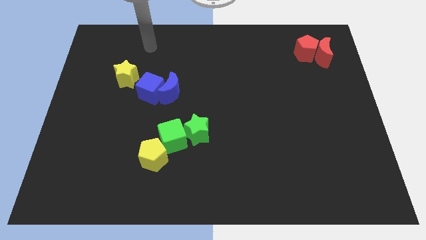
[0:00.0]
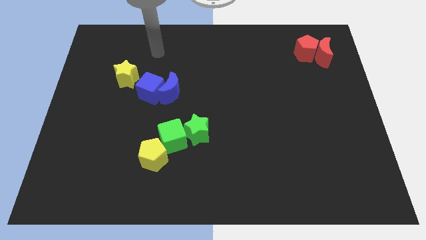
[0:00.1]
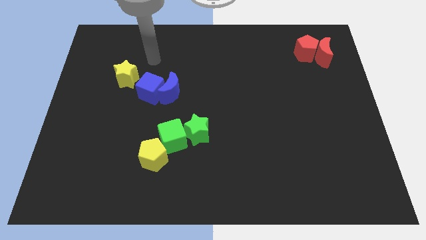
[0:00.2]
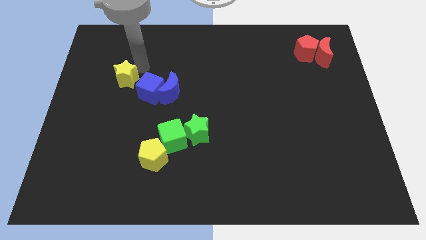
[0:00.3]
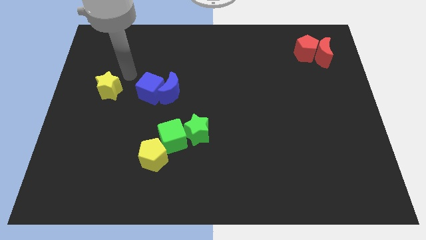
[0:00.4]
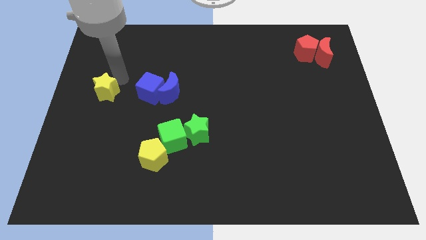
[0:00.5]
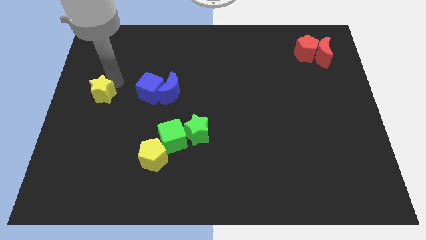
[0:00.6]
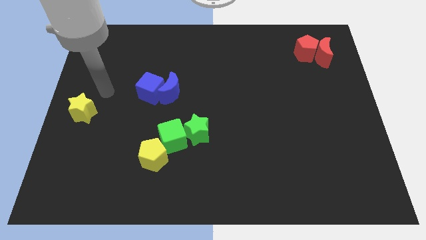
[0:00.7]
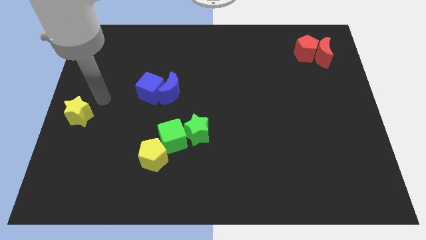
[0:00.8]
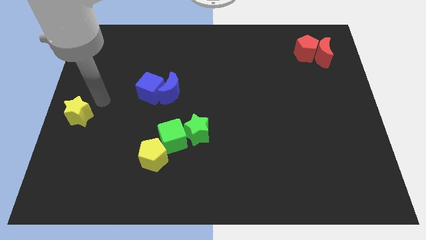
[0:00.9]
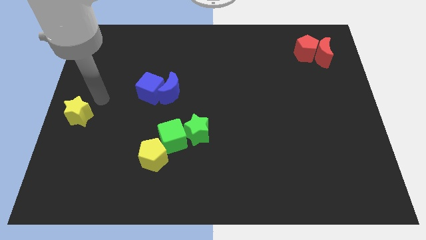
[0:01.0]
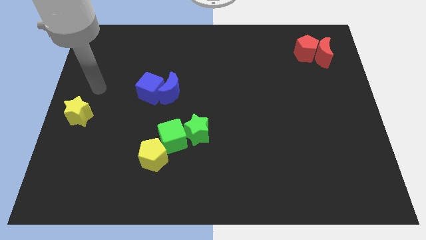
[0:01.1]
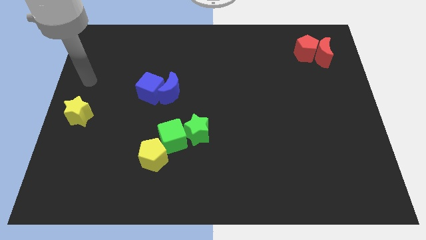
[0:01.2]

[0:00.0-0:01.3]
push the yellow star to the left center of the board

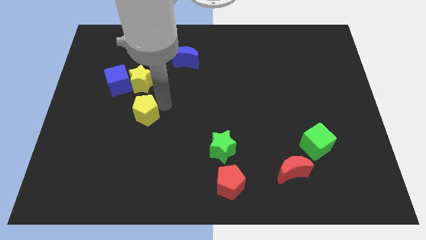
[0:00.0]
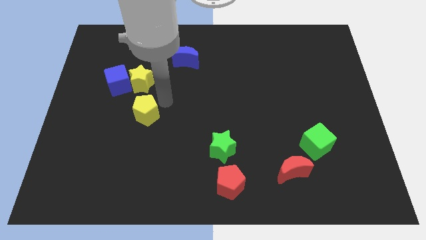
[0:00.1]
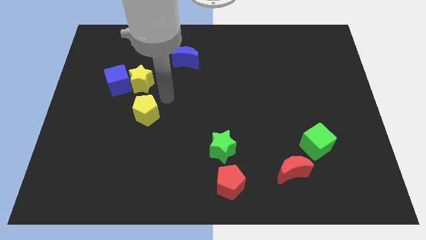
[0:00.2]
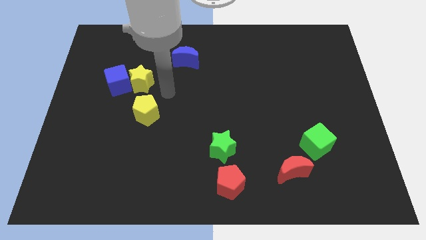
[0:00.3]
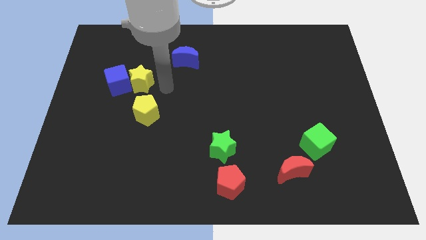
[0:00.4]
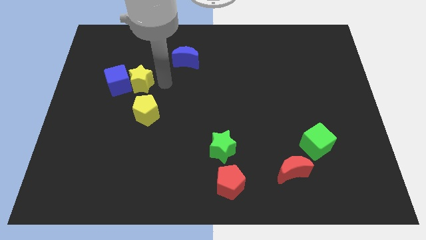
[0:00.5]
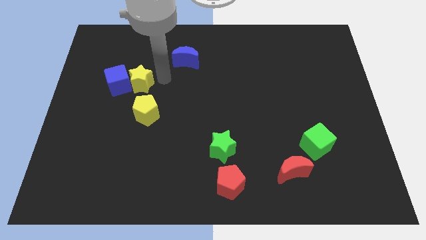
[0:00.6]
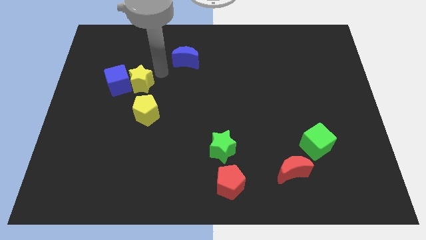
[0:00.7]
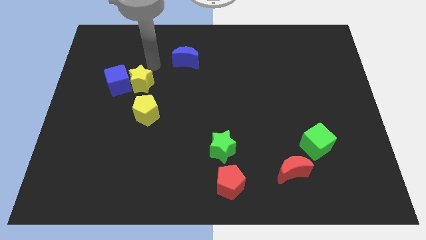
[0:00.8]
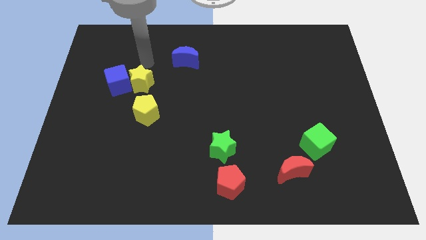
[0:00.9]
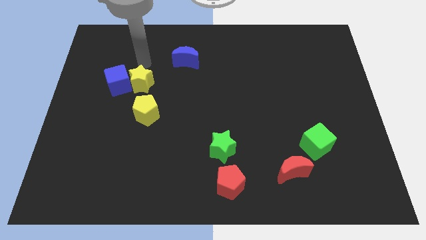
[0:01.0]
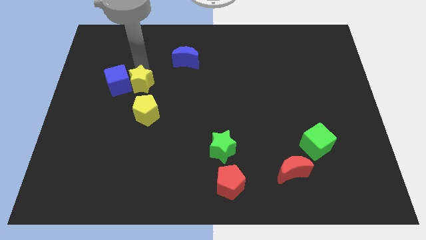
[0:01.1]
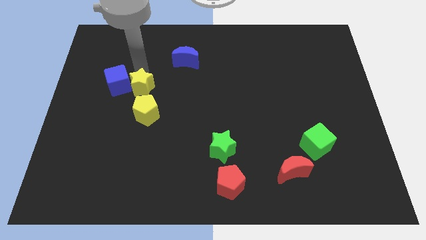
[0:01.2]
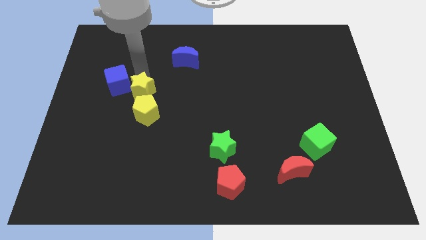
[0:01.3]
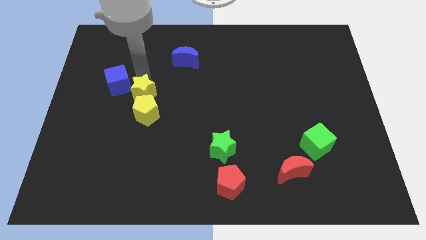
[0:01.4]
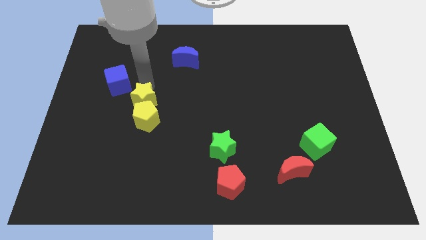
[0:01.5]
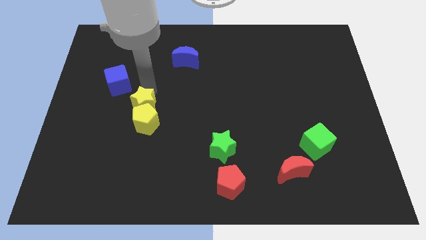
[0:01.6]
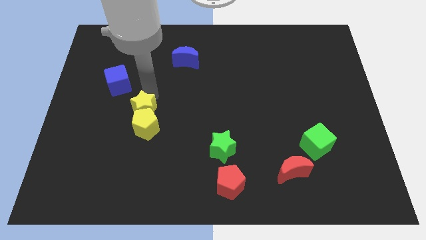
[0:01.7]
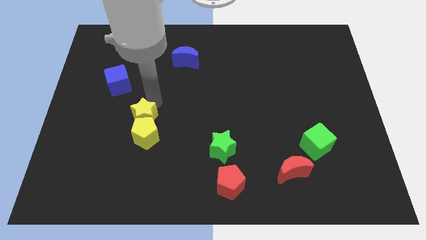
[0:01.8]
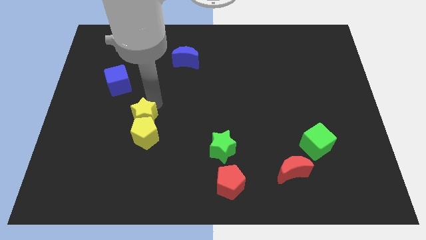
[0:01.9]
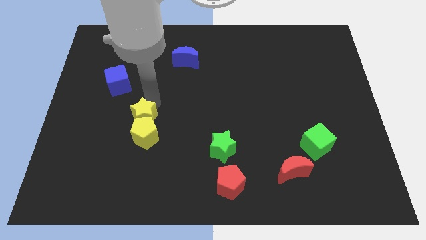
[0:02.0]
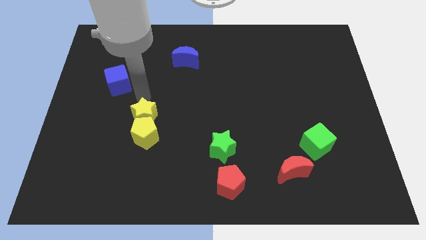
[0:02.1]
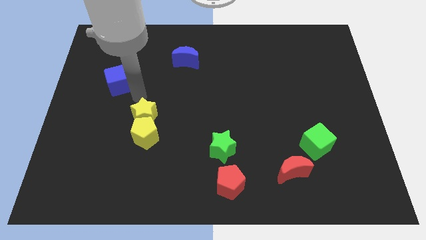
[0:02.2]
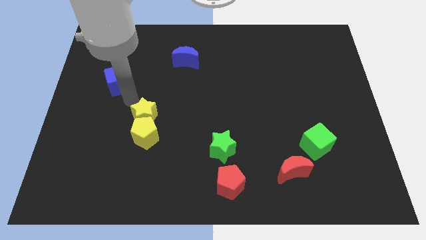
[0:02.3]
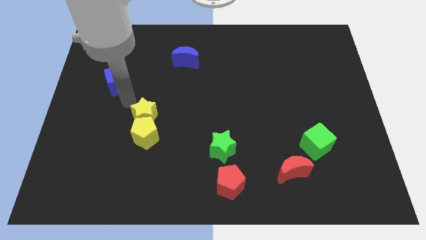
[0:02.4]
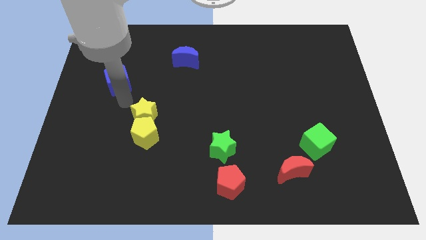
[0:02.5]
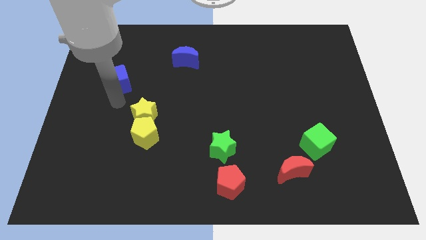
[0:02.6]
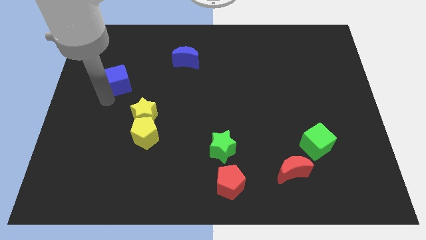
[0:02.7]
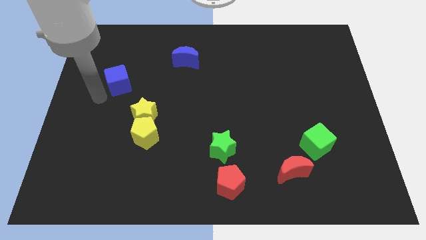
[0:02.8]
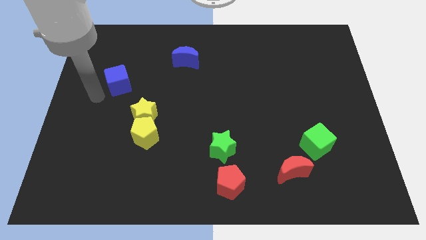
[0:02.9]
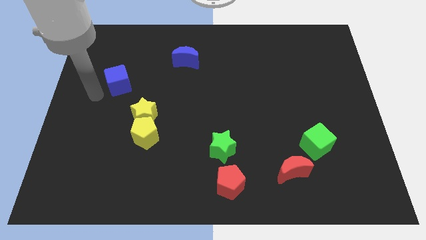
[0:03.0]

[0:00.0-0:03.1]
move the yellow star into the yellow pentagon

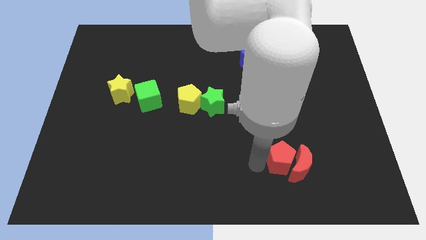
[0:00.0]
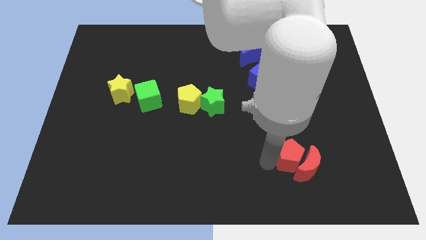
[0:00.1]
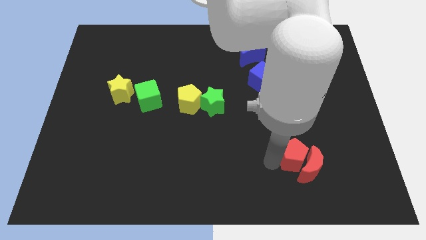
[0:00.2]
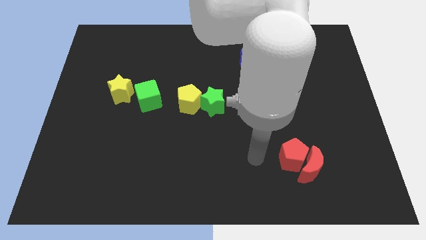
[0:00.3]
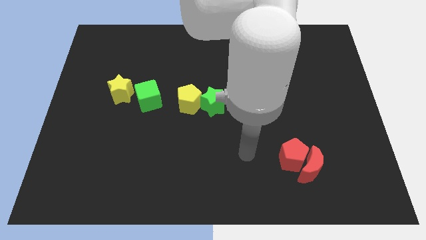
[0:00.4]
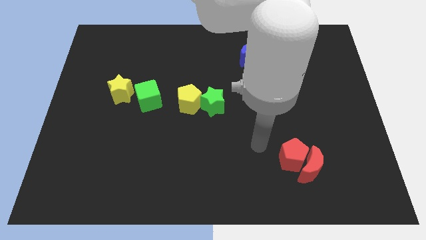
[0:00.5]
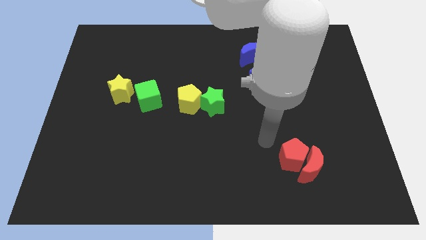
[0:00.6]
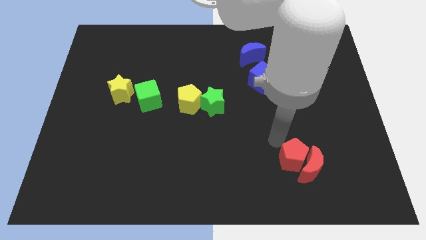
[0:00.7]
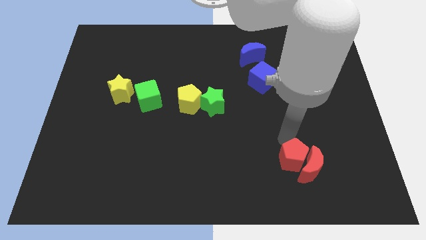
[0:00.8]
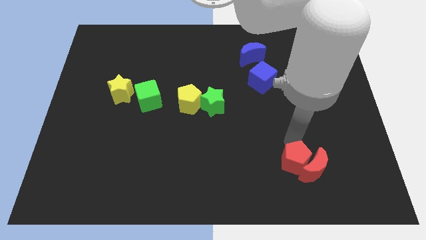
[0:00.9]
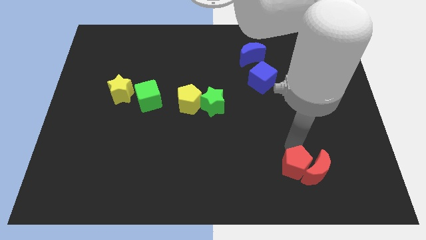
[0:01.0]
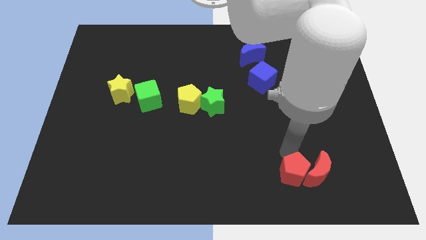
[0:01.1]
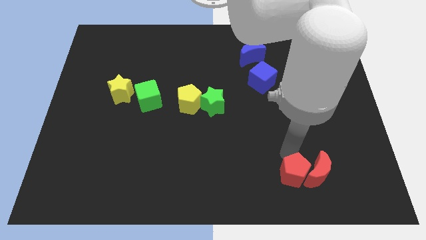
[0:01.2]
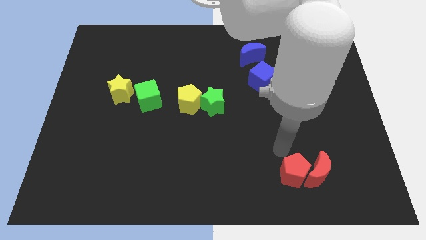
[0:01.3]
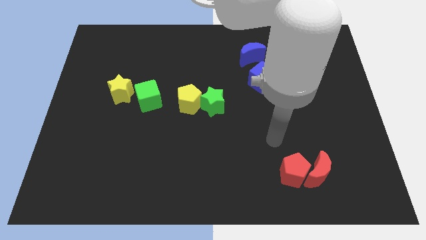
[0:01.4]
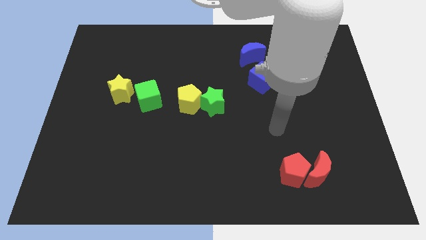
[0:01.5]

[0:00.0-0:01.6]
push the red pentagon and red half moon slightly downwards

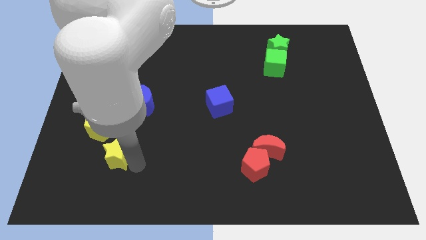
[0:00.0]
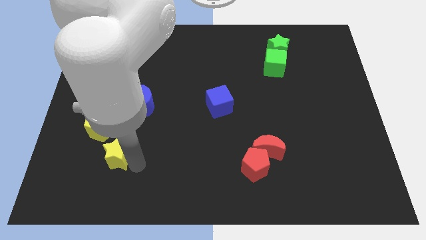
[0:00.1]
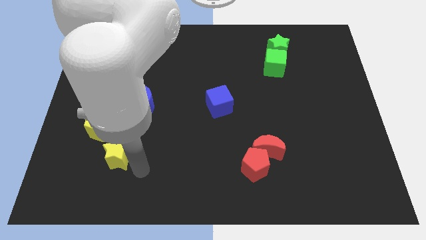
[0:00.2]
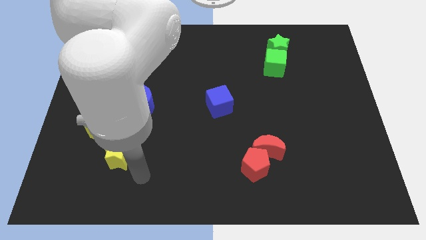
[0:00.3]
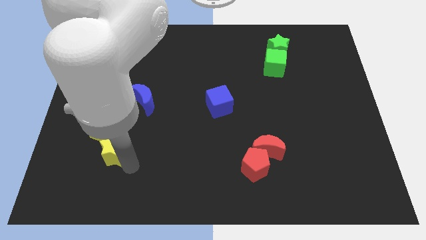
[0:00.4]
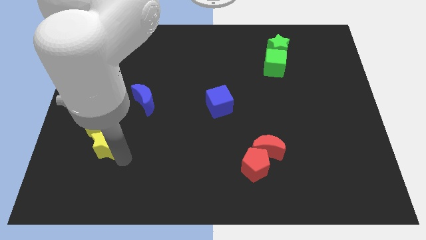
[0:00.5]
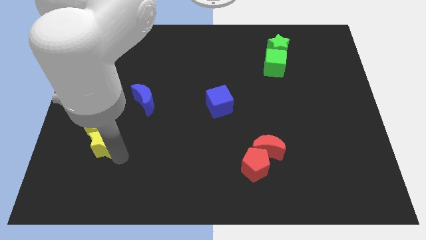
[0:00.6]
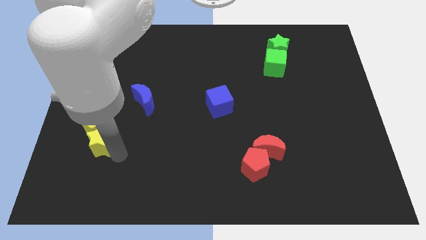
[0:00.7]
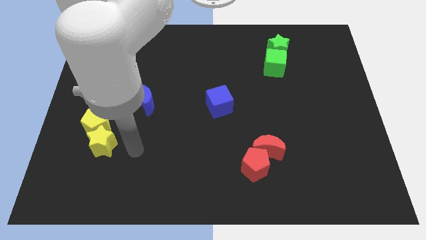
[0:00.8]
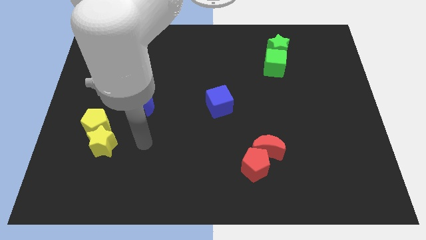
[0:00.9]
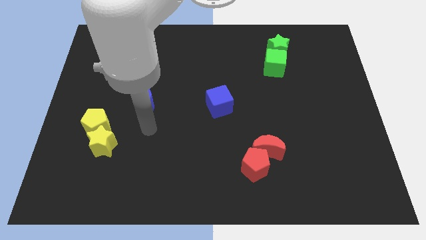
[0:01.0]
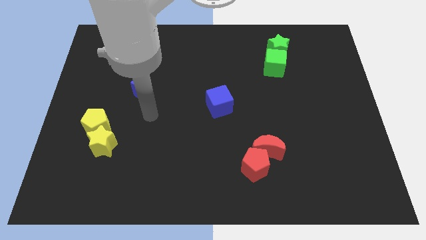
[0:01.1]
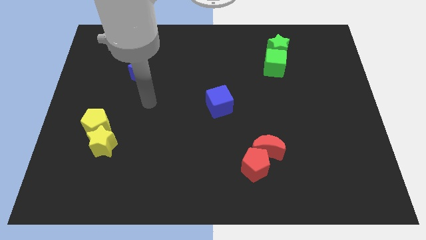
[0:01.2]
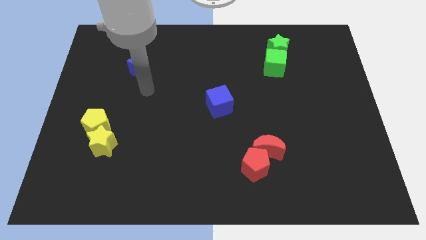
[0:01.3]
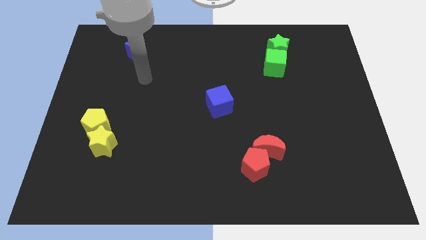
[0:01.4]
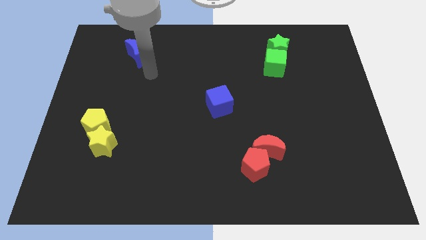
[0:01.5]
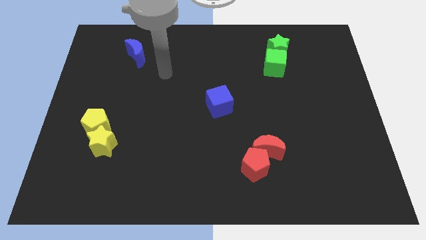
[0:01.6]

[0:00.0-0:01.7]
place the yellow star at the bottom of the yellow pentagon

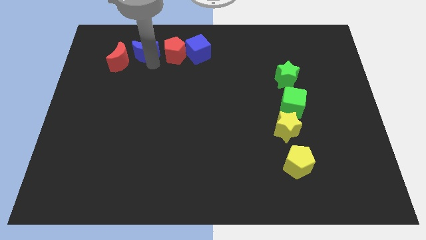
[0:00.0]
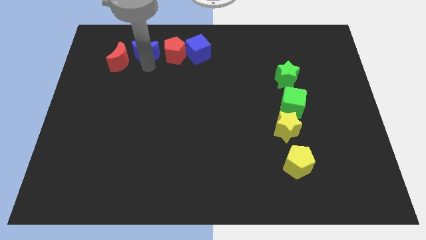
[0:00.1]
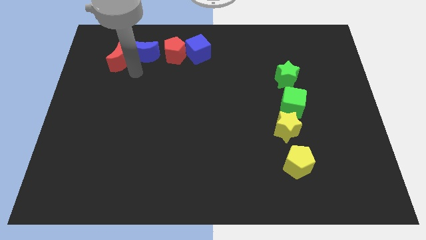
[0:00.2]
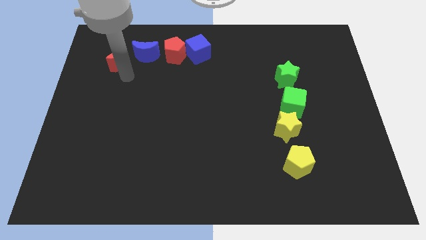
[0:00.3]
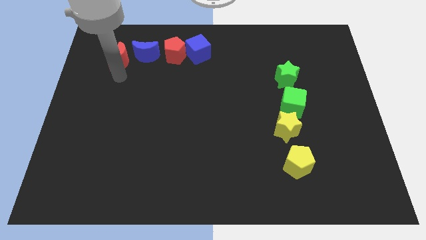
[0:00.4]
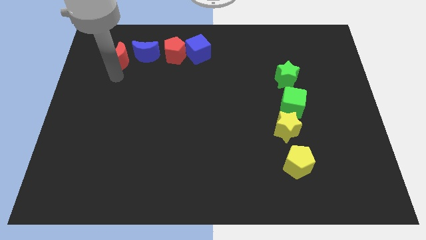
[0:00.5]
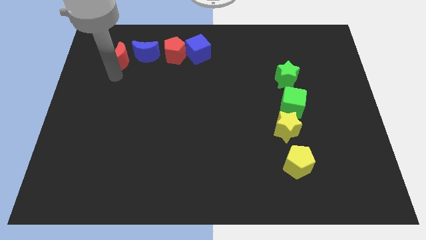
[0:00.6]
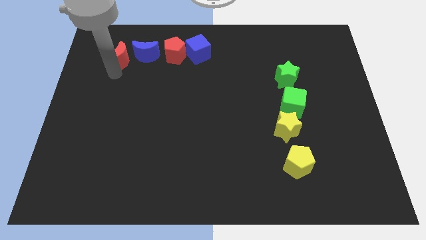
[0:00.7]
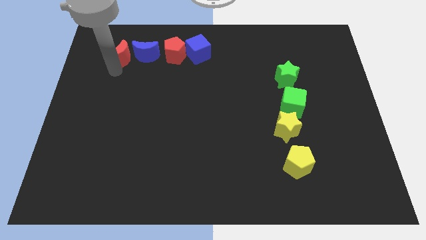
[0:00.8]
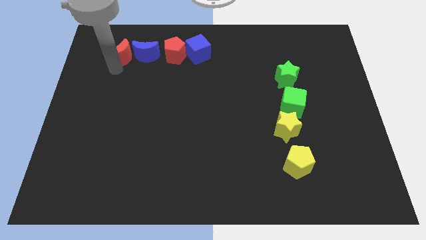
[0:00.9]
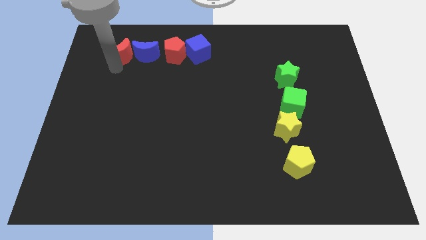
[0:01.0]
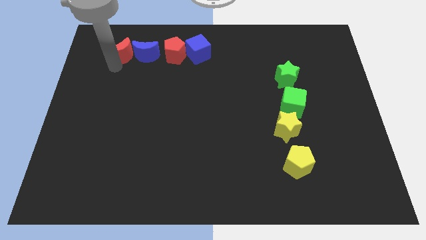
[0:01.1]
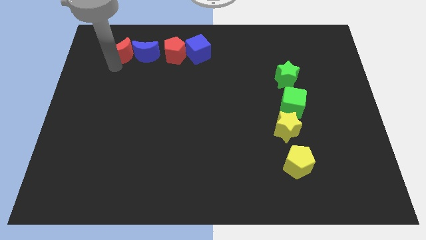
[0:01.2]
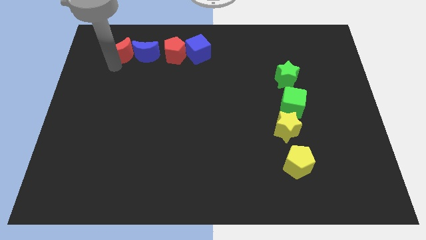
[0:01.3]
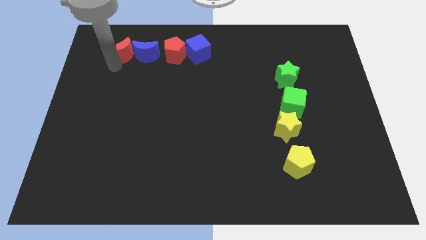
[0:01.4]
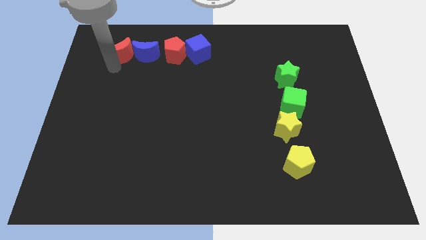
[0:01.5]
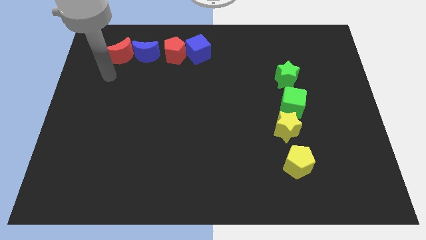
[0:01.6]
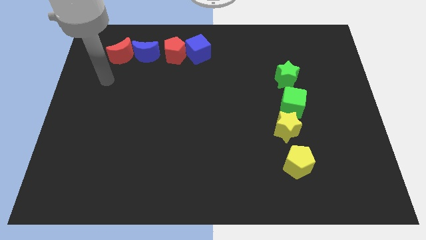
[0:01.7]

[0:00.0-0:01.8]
move the red moon close to the blue crescent
